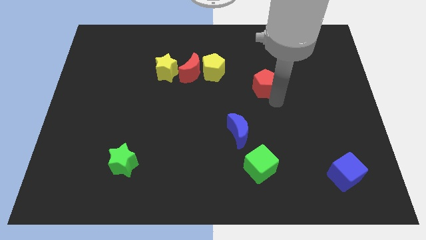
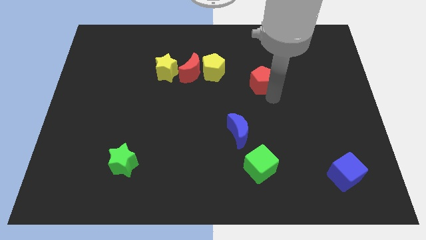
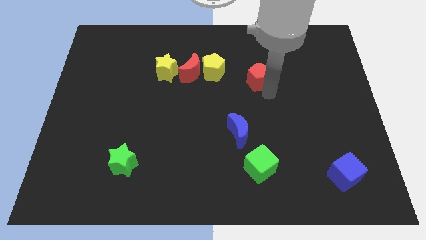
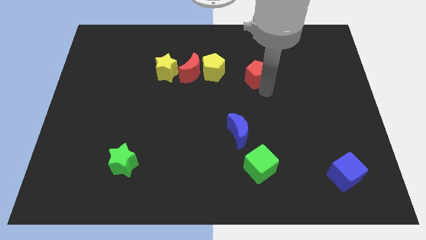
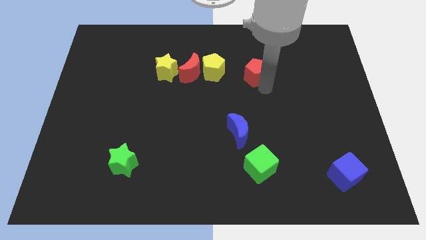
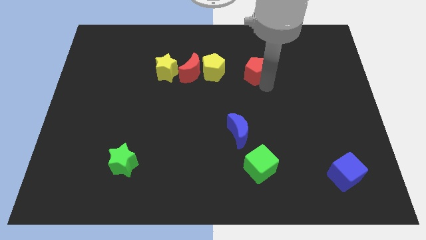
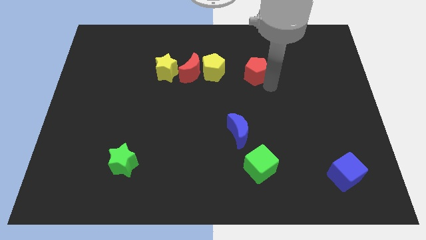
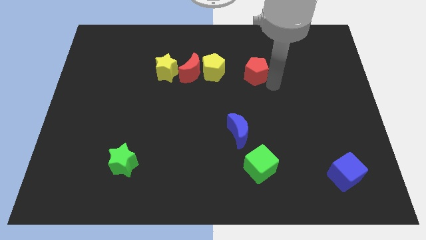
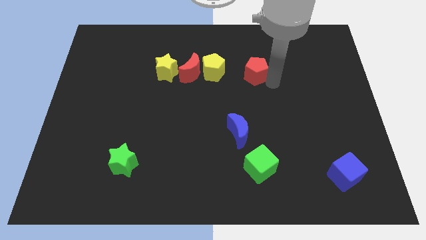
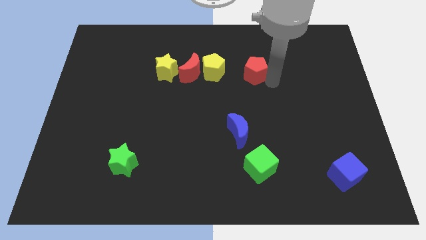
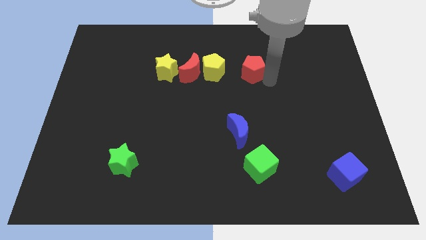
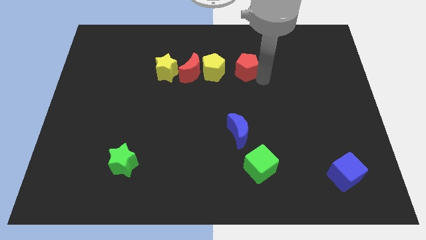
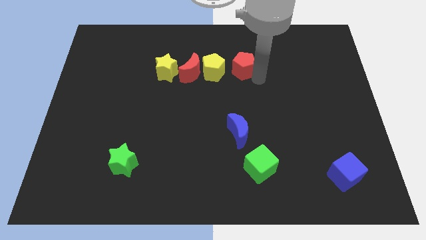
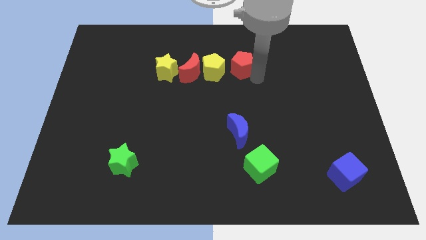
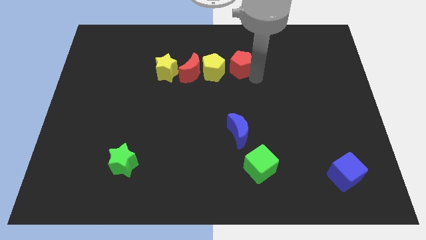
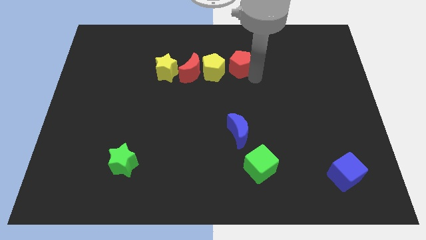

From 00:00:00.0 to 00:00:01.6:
place the red pentagon right to the yellow pentagon

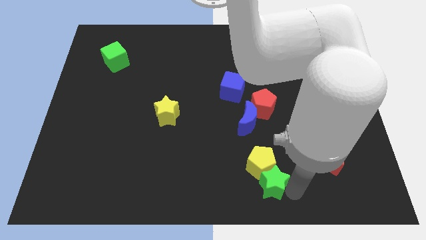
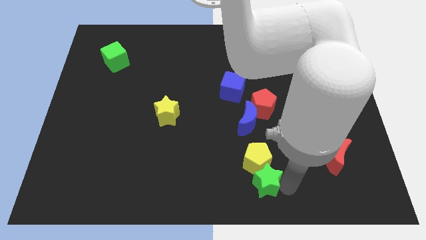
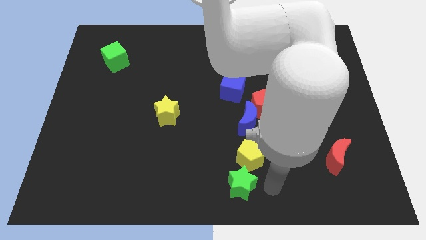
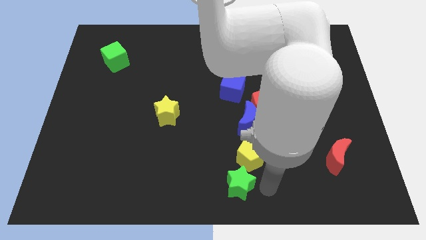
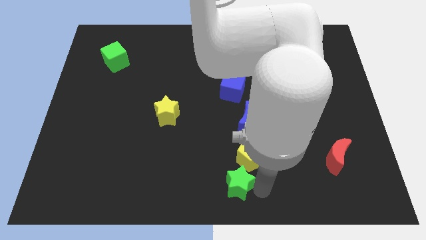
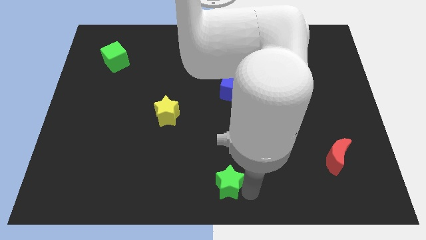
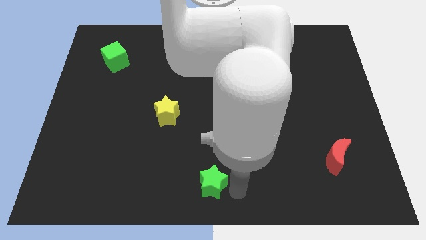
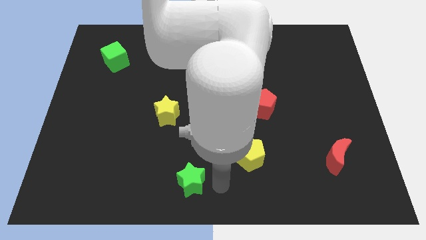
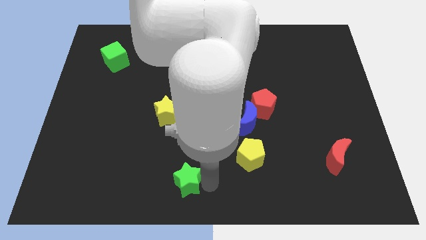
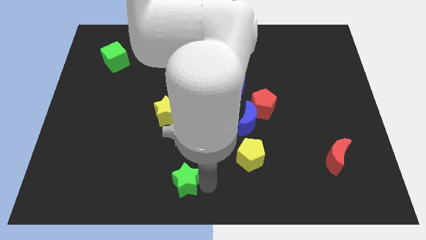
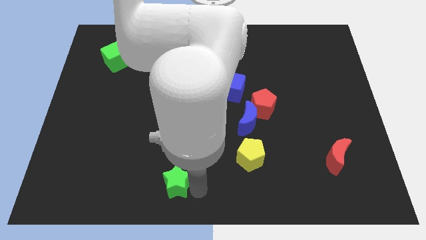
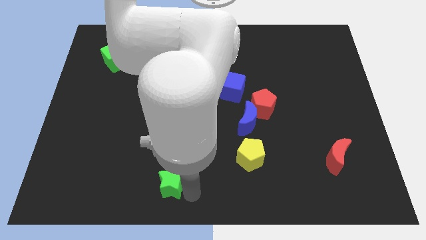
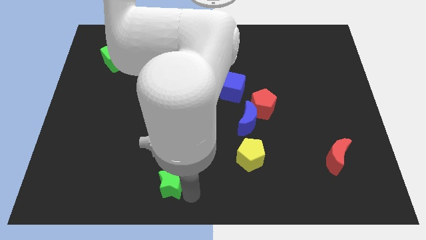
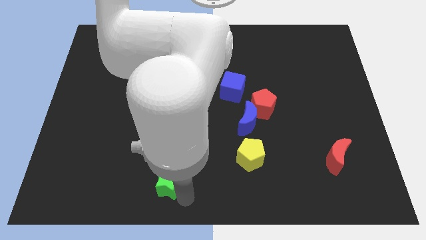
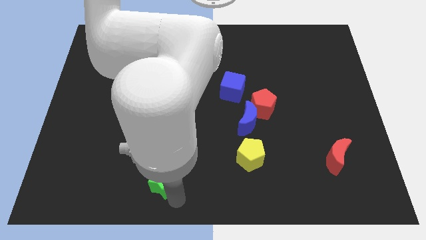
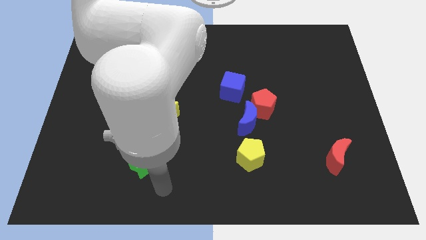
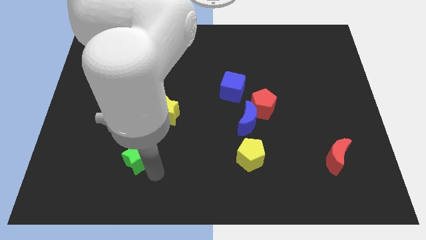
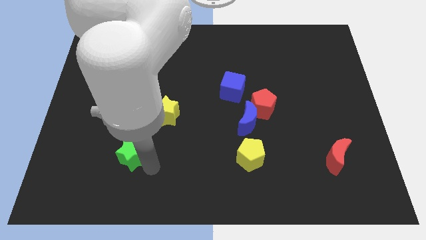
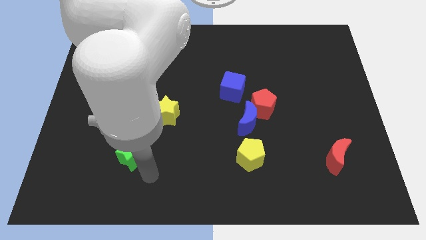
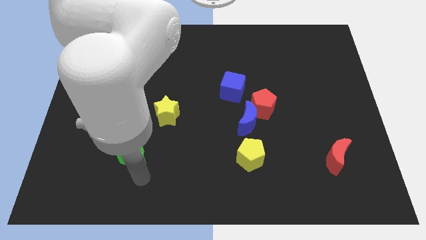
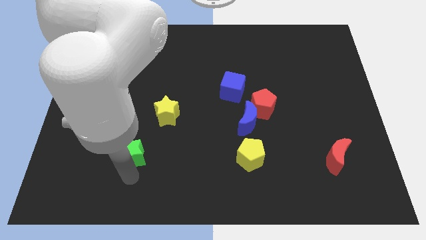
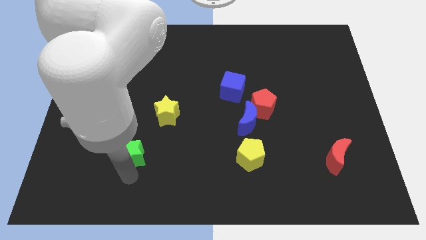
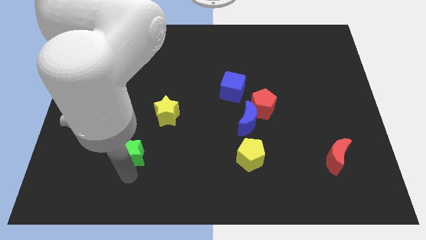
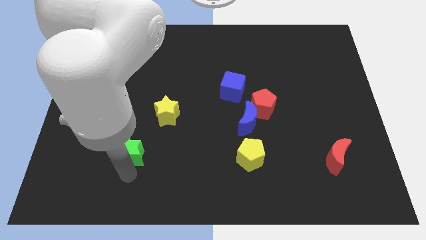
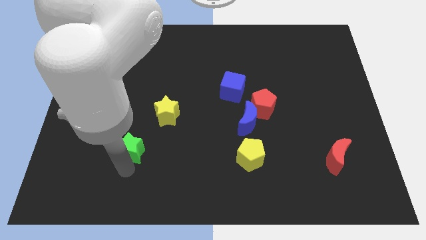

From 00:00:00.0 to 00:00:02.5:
separate the green star from the yellow pentagon

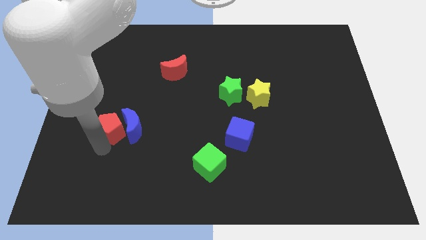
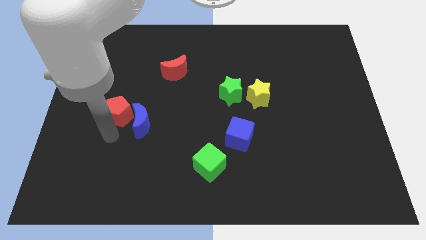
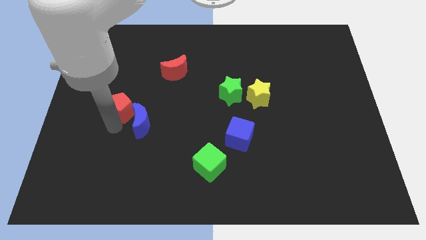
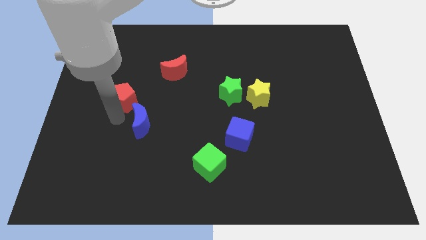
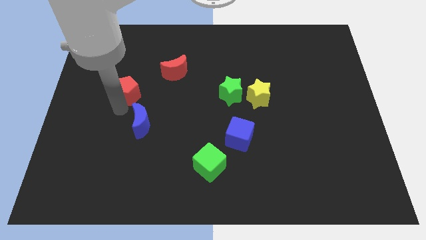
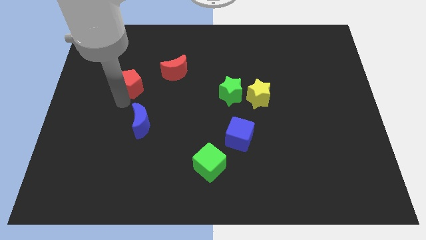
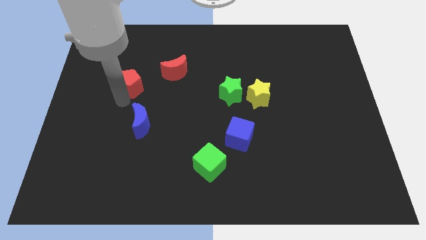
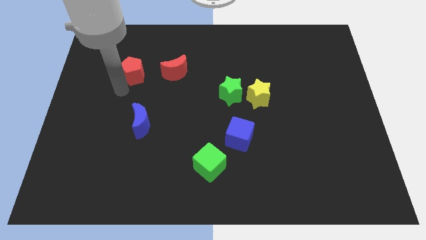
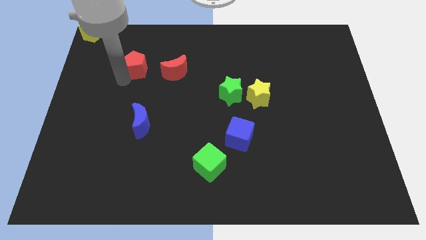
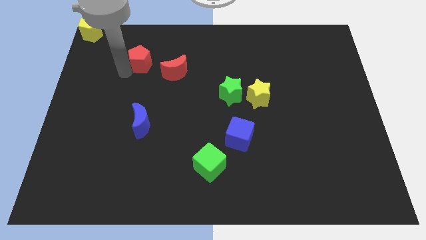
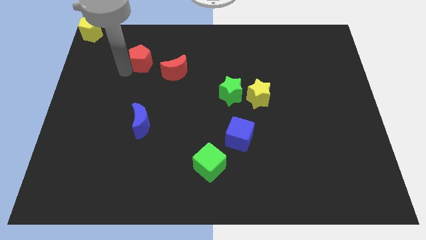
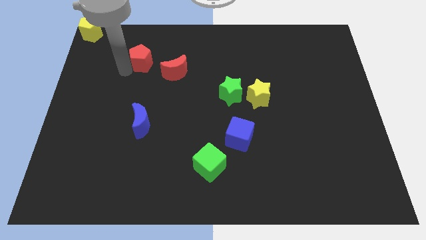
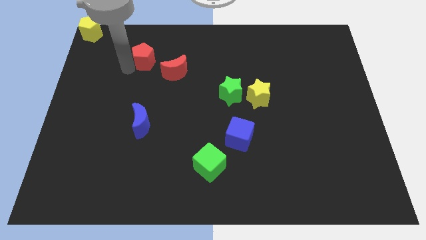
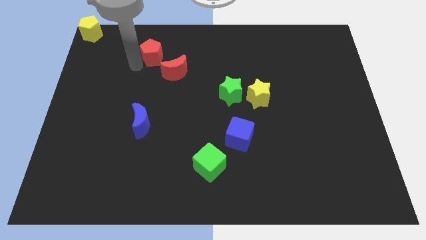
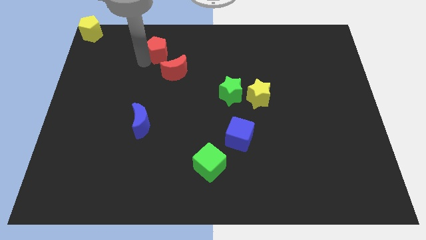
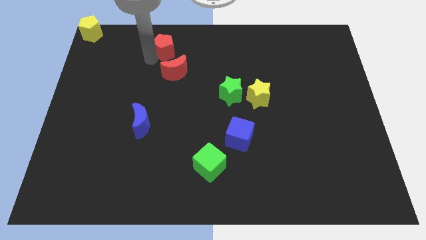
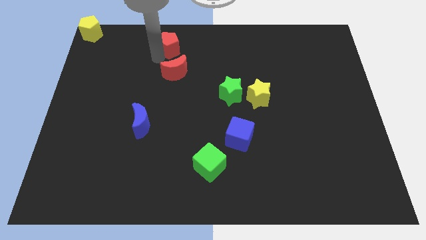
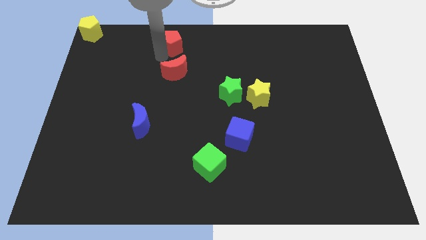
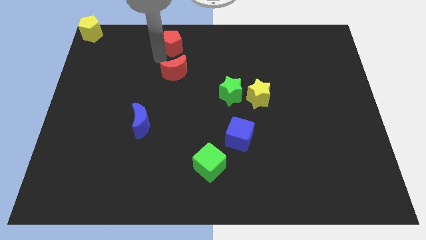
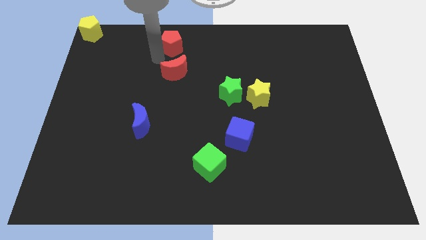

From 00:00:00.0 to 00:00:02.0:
put the red pentagon vertically above the red moon

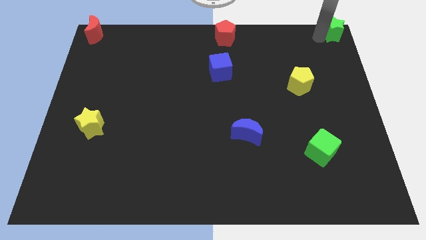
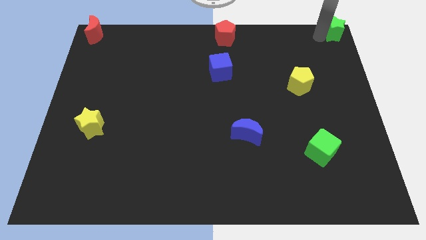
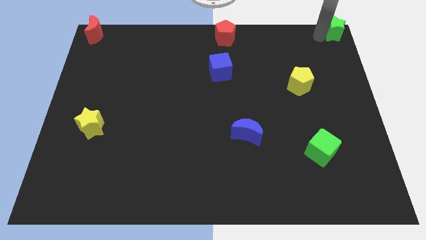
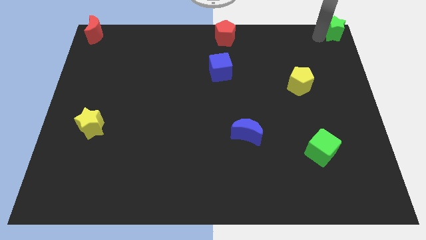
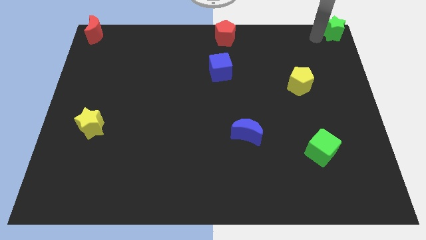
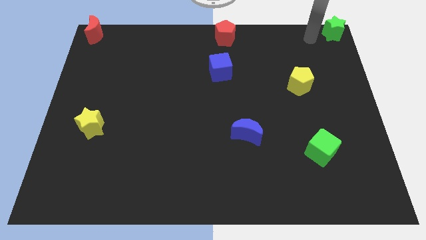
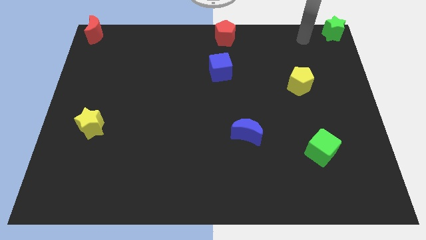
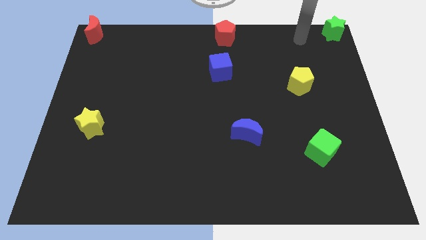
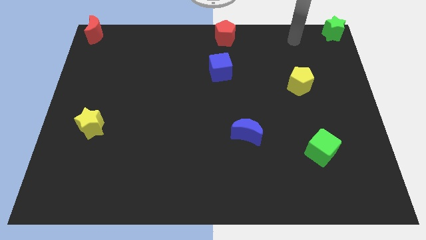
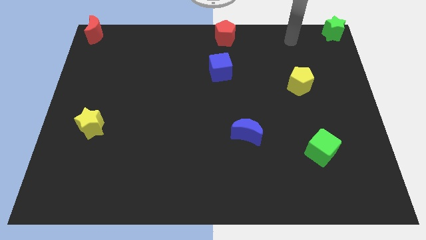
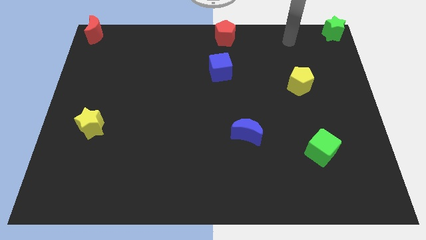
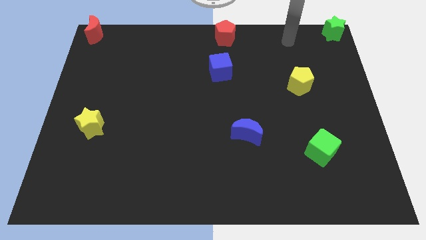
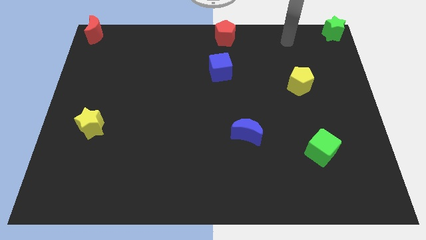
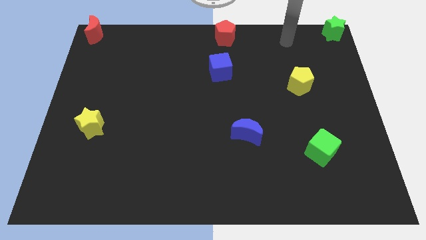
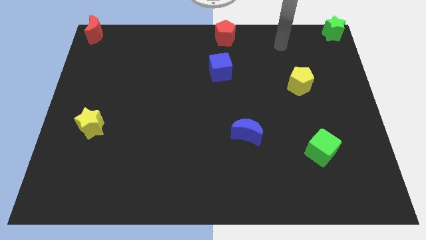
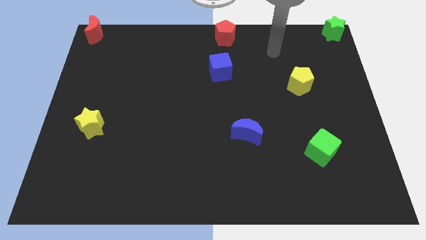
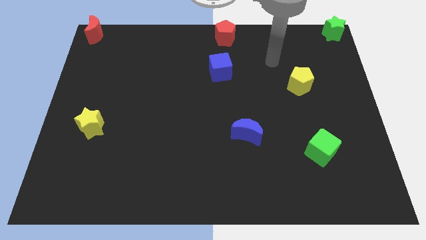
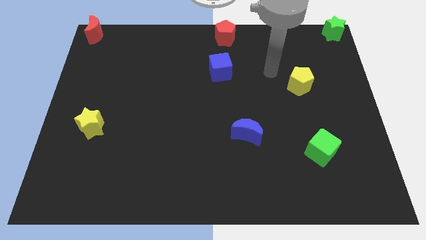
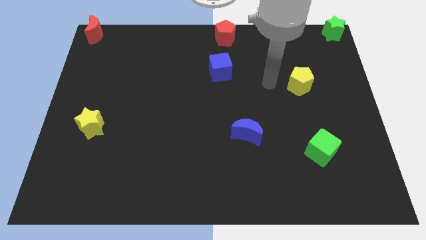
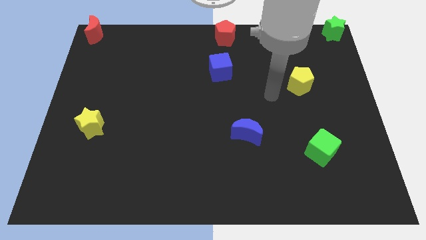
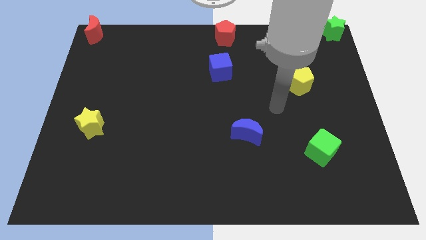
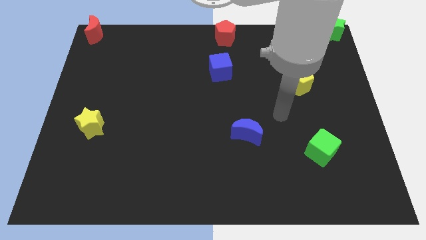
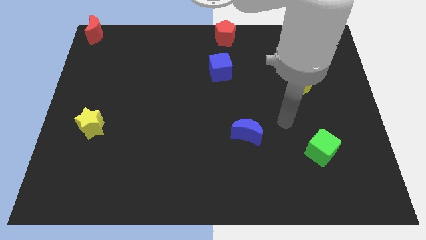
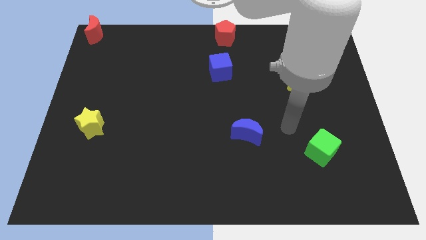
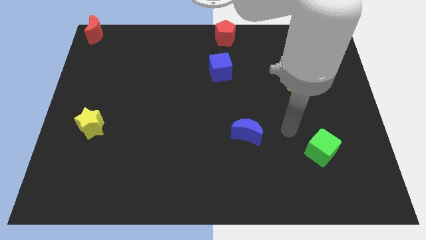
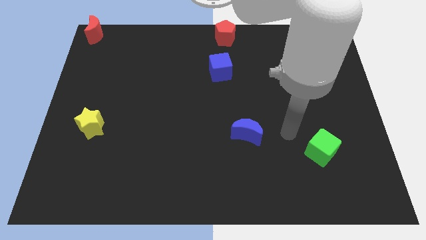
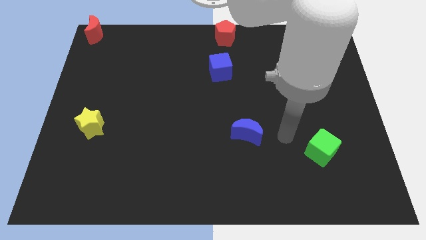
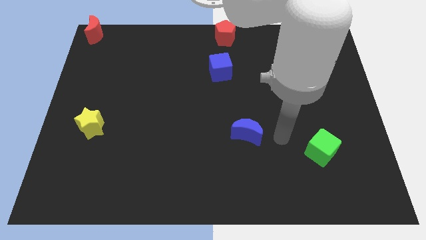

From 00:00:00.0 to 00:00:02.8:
move the arm near to the blue crescent

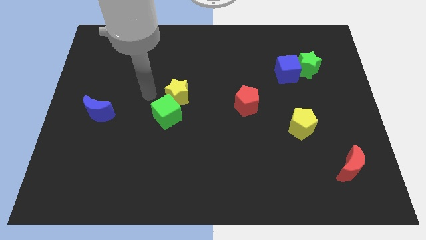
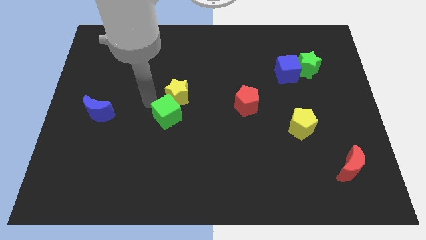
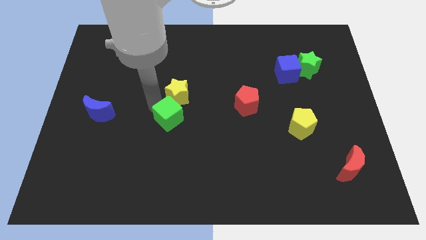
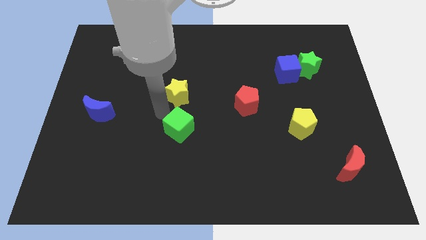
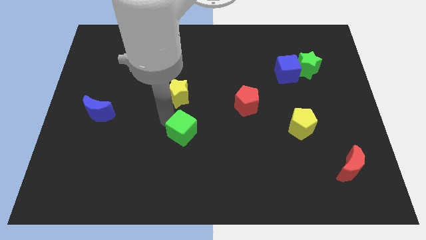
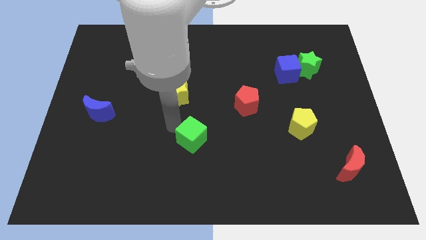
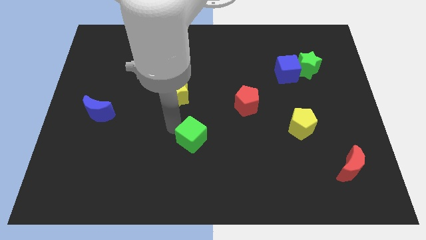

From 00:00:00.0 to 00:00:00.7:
separate green cube from the yellow star
